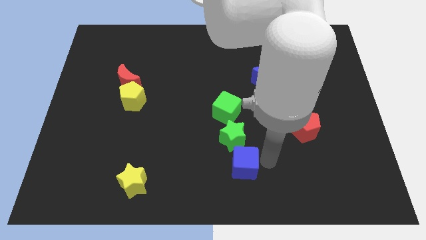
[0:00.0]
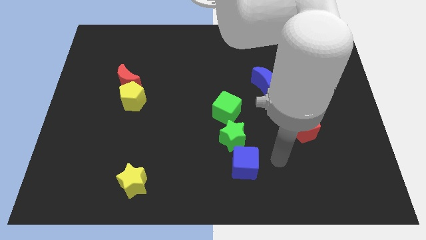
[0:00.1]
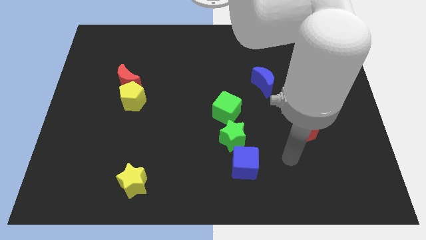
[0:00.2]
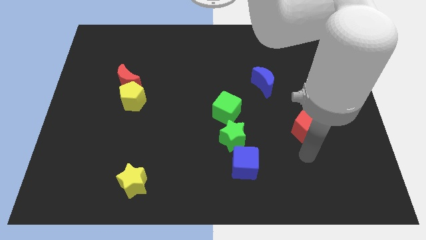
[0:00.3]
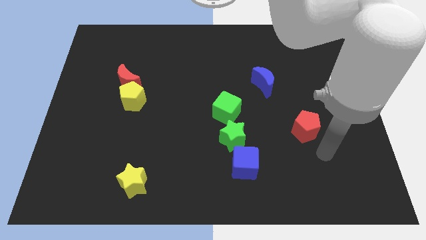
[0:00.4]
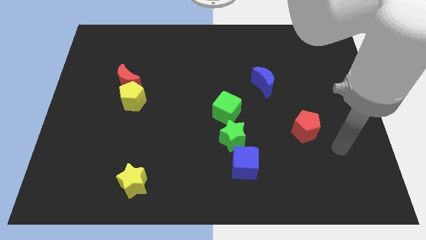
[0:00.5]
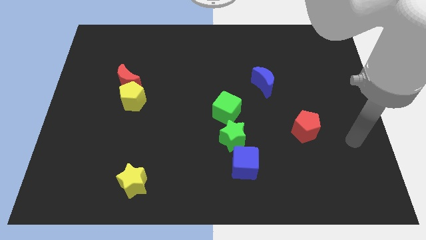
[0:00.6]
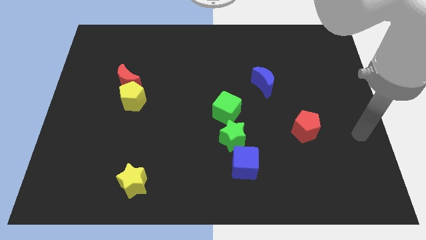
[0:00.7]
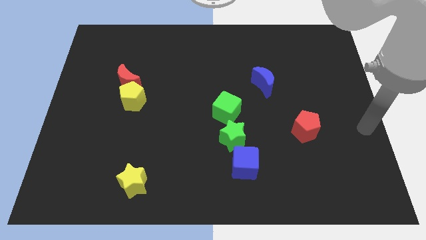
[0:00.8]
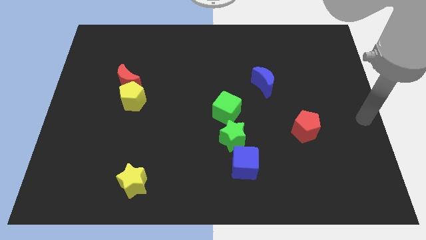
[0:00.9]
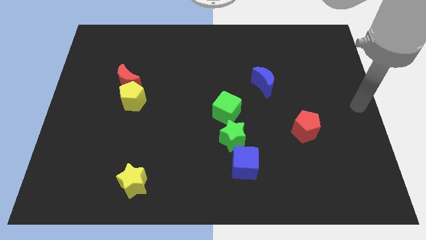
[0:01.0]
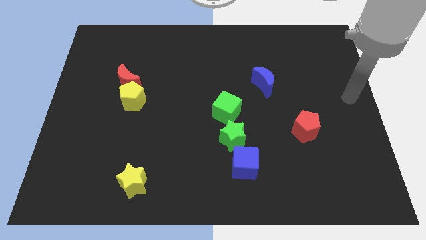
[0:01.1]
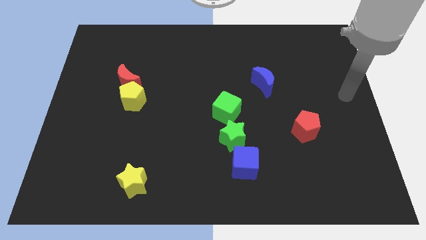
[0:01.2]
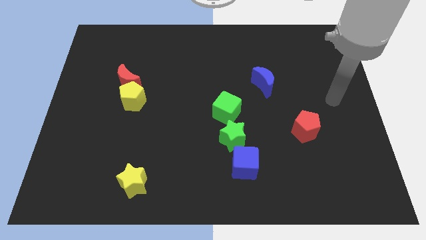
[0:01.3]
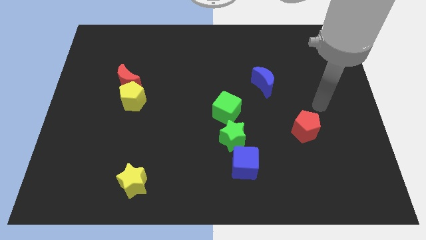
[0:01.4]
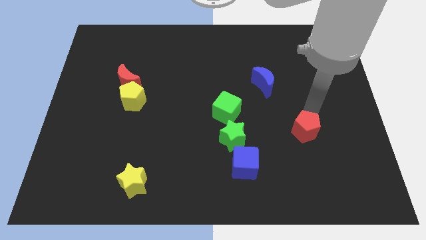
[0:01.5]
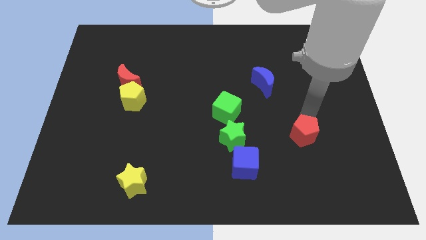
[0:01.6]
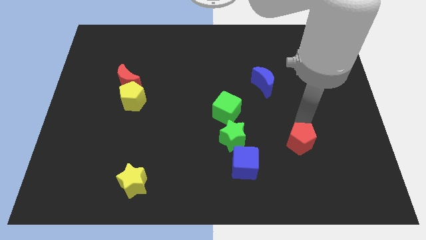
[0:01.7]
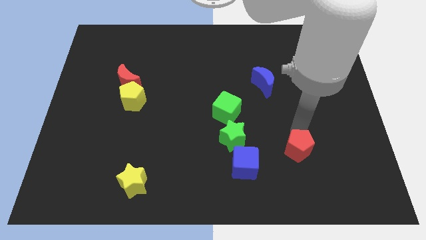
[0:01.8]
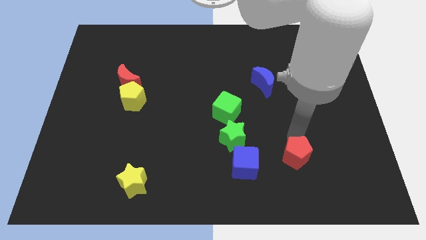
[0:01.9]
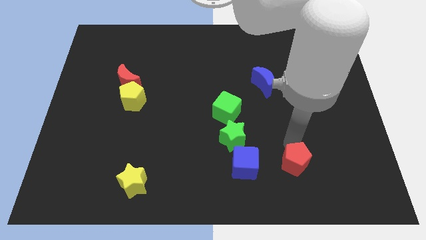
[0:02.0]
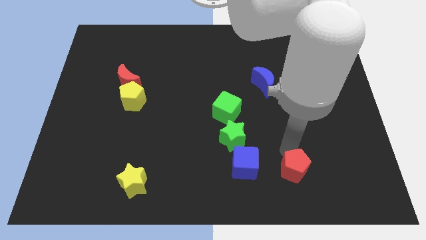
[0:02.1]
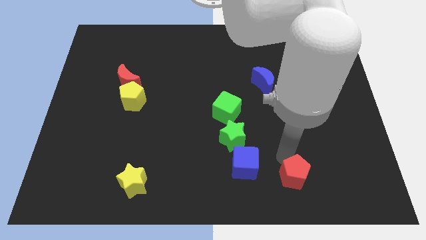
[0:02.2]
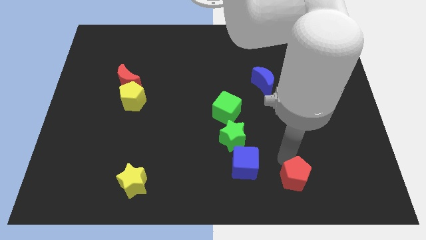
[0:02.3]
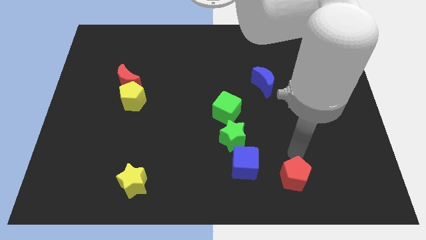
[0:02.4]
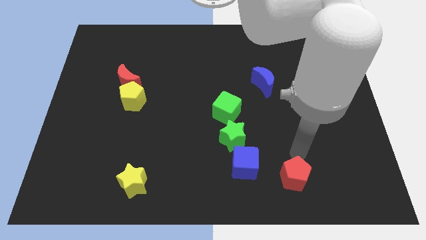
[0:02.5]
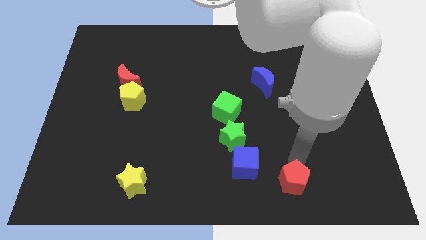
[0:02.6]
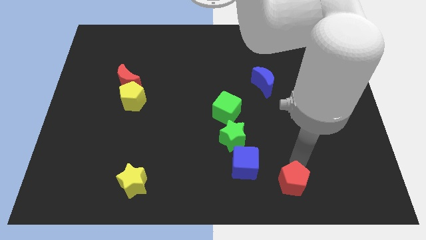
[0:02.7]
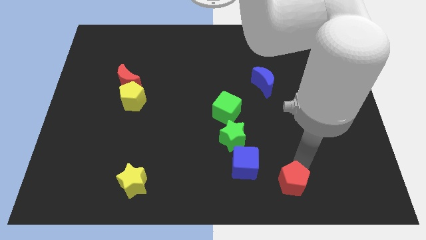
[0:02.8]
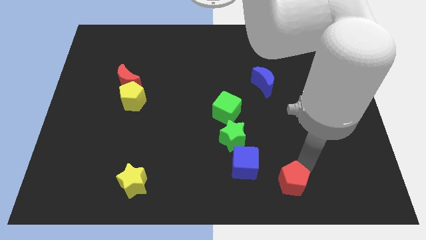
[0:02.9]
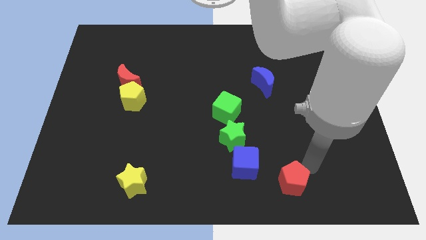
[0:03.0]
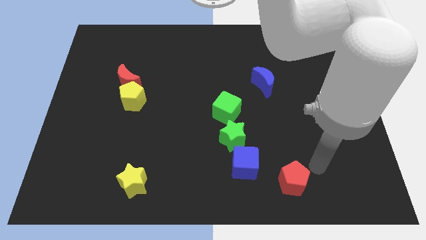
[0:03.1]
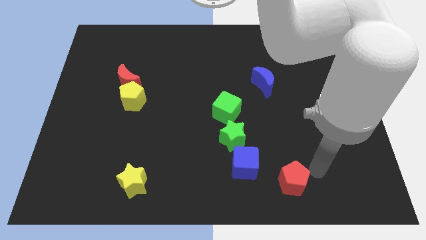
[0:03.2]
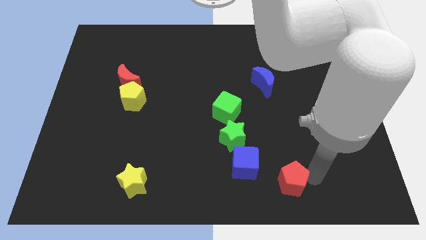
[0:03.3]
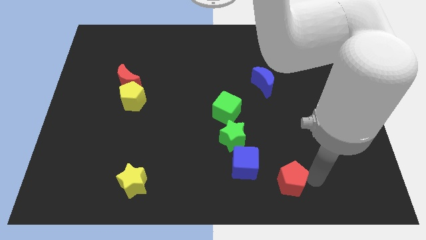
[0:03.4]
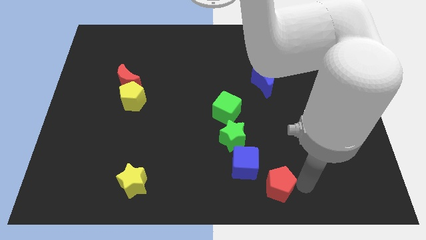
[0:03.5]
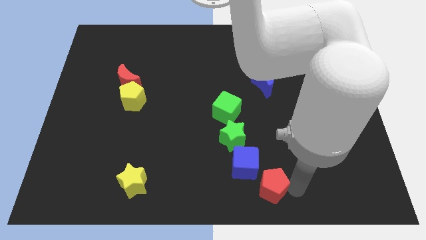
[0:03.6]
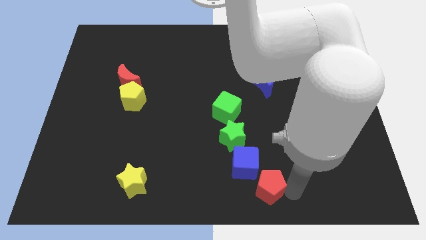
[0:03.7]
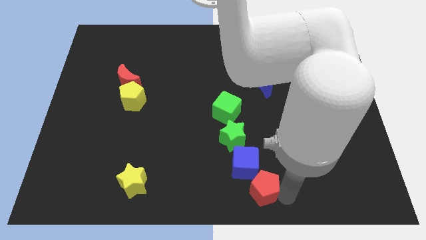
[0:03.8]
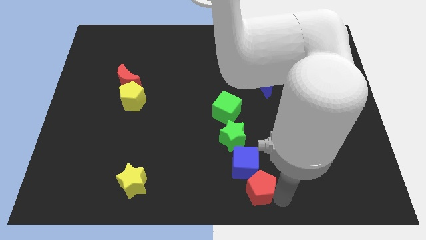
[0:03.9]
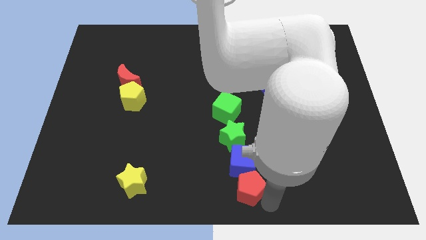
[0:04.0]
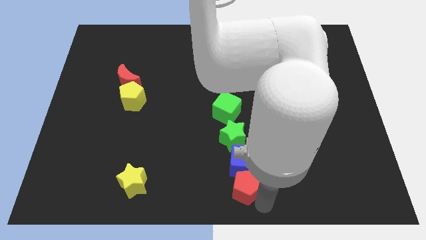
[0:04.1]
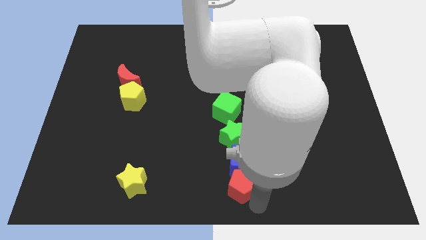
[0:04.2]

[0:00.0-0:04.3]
place the red pentagon below the blue cube

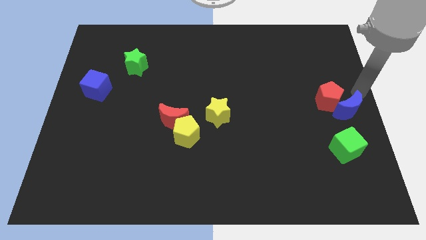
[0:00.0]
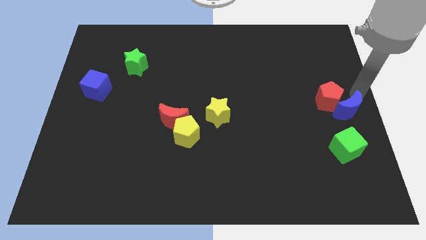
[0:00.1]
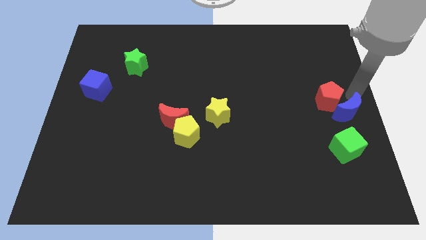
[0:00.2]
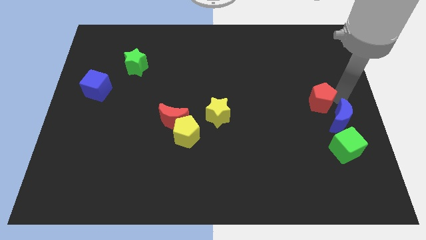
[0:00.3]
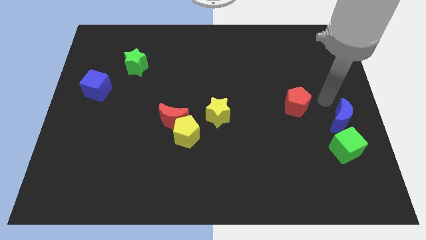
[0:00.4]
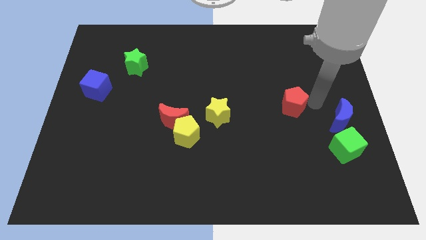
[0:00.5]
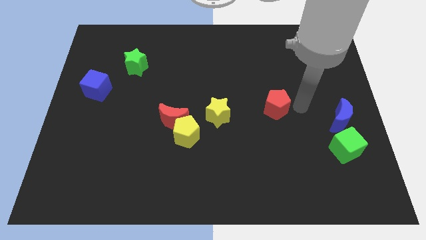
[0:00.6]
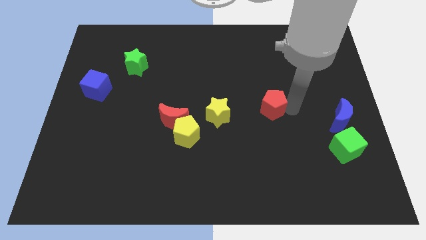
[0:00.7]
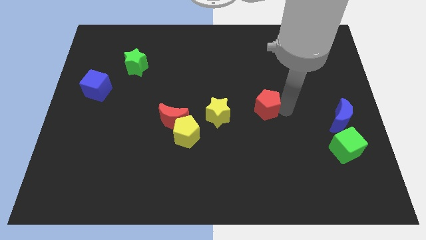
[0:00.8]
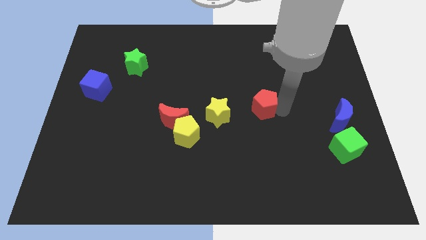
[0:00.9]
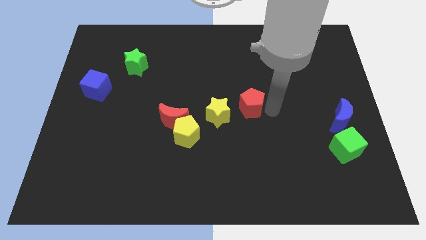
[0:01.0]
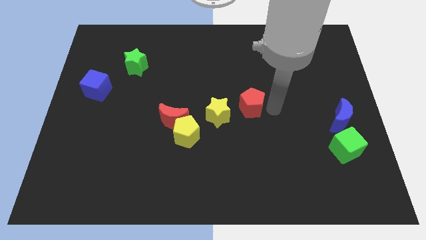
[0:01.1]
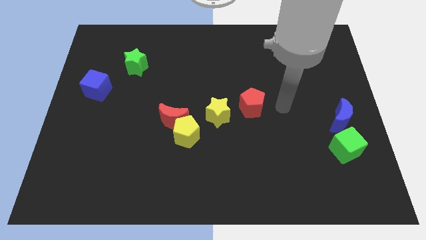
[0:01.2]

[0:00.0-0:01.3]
separate red pentagon from blue moon

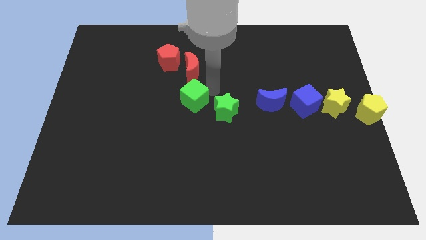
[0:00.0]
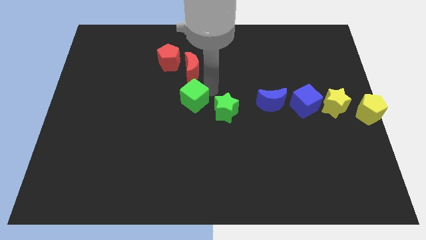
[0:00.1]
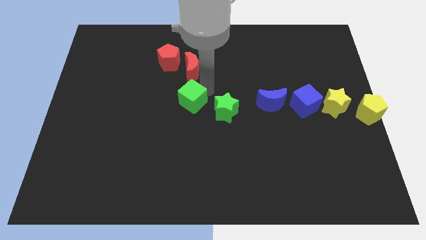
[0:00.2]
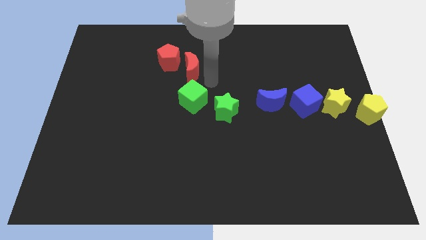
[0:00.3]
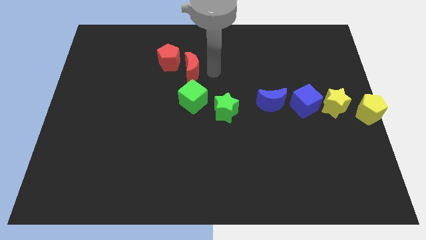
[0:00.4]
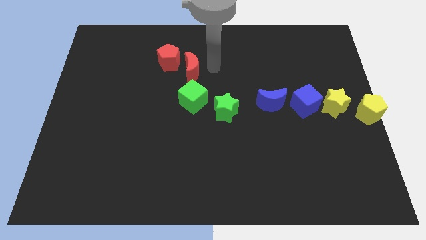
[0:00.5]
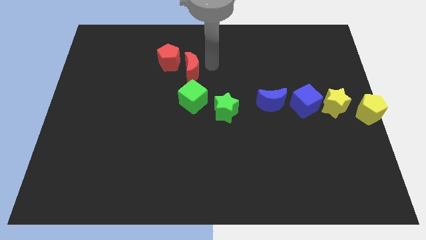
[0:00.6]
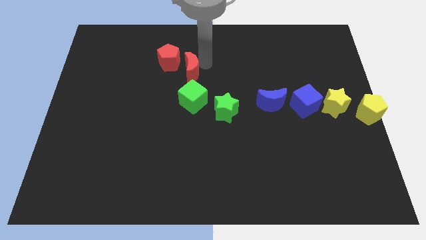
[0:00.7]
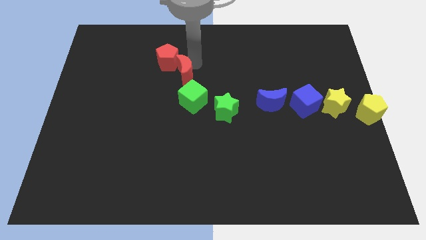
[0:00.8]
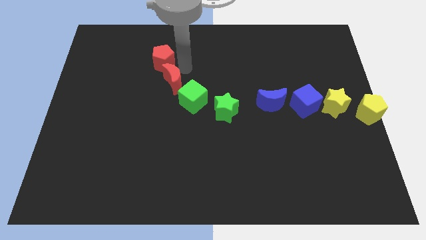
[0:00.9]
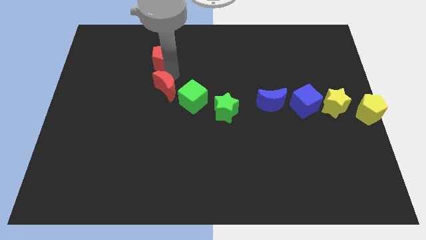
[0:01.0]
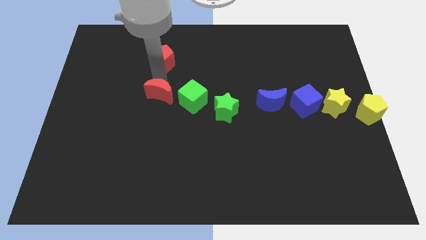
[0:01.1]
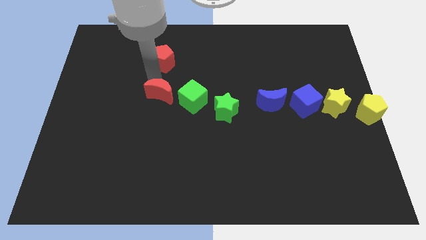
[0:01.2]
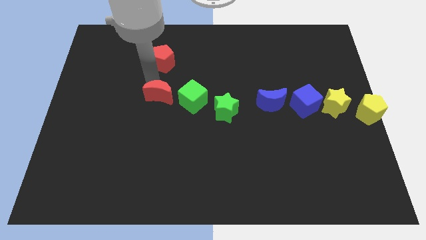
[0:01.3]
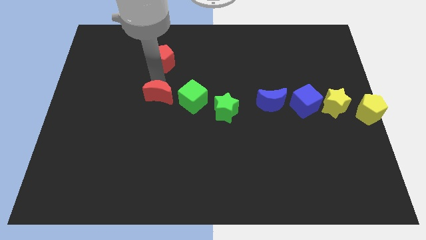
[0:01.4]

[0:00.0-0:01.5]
move the red moon left to the green cube

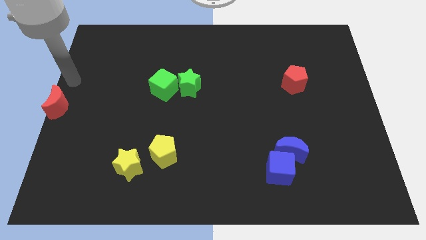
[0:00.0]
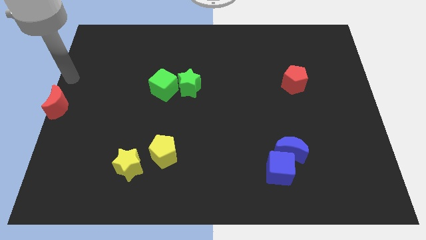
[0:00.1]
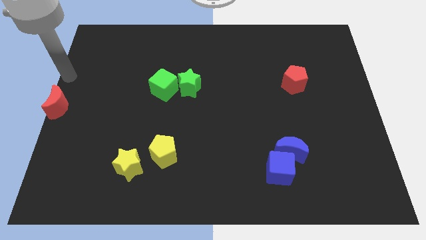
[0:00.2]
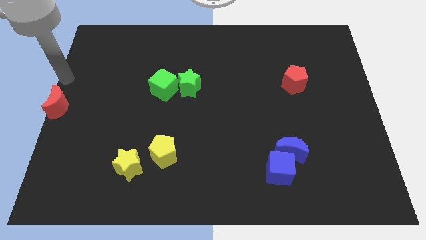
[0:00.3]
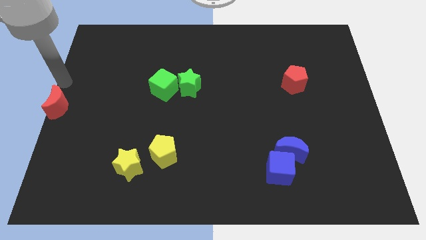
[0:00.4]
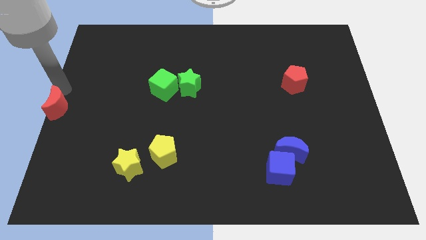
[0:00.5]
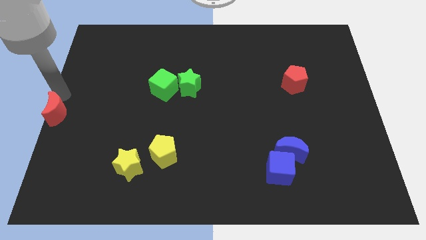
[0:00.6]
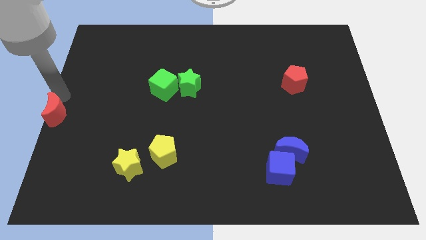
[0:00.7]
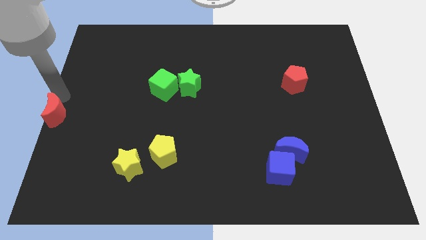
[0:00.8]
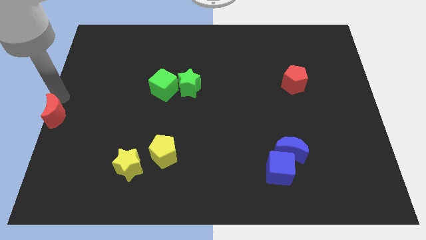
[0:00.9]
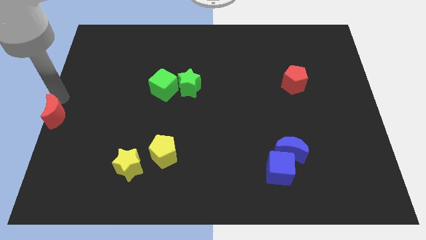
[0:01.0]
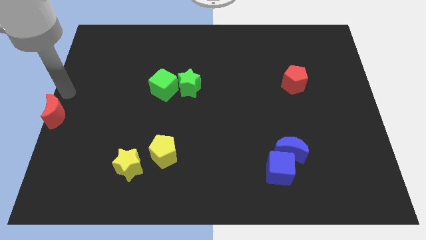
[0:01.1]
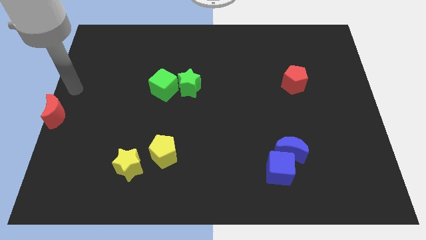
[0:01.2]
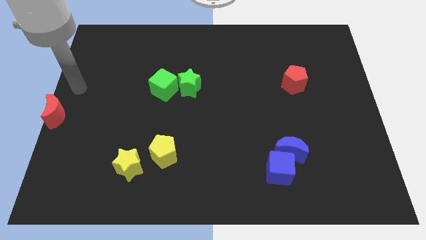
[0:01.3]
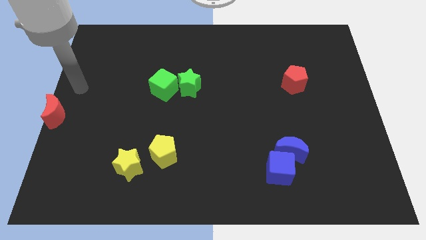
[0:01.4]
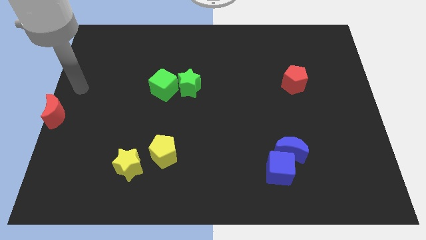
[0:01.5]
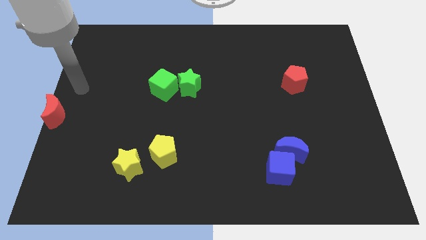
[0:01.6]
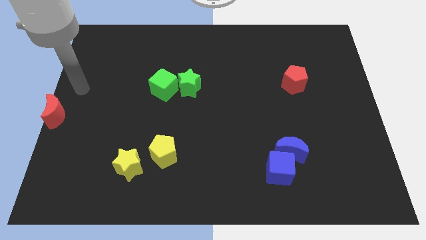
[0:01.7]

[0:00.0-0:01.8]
move your arm away from the red crescent
